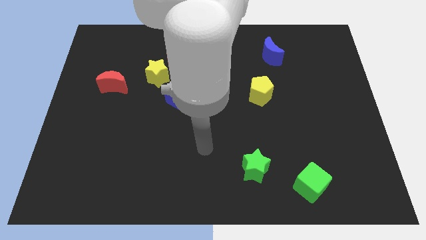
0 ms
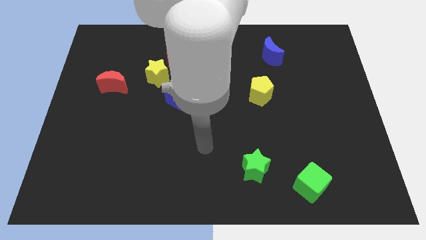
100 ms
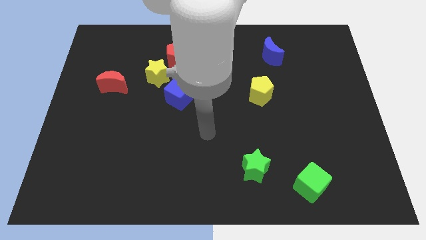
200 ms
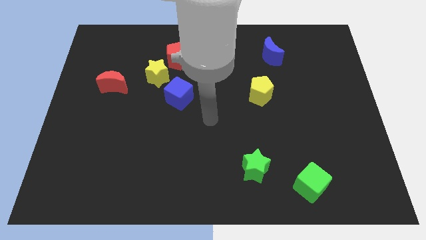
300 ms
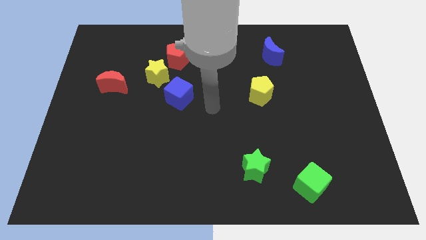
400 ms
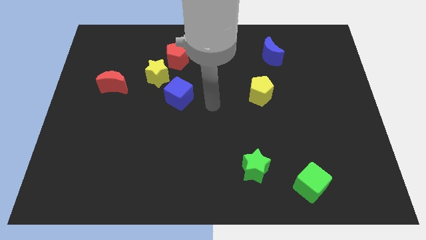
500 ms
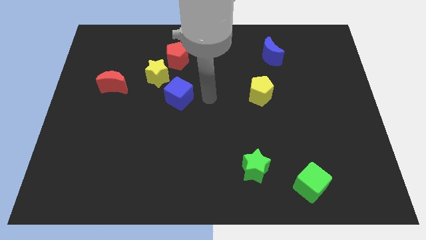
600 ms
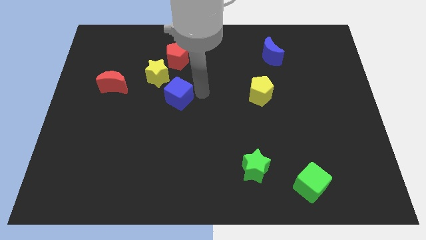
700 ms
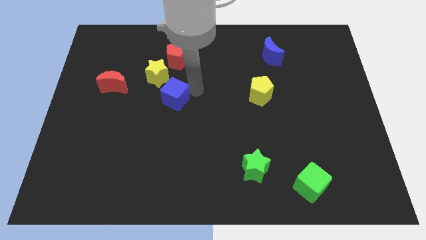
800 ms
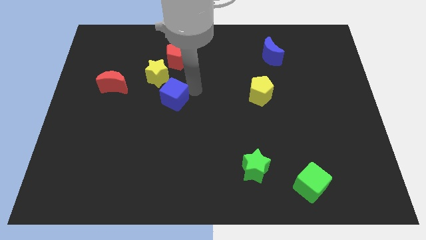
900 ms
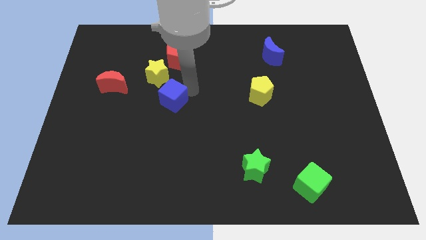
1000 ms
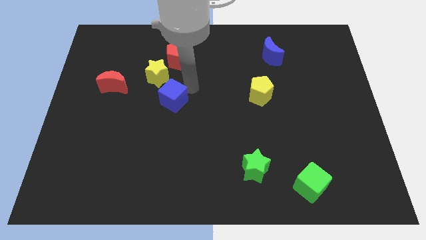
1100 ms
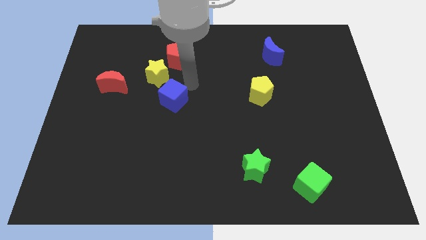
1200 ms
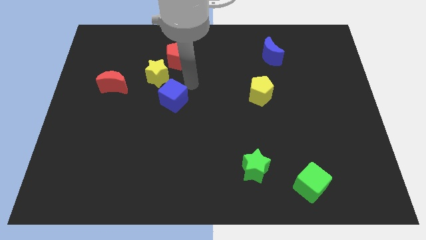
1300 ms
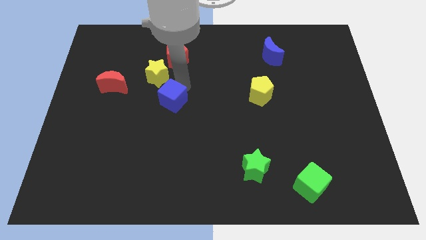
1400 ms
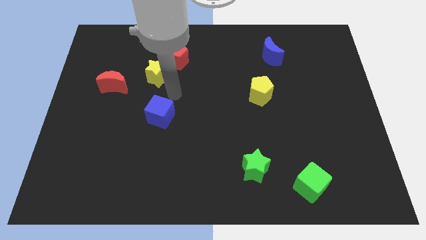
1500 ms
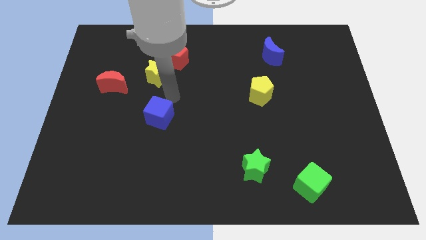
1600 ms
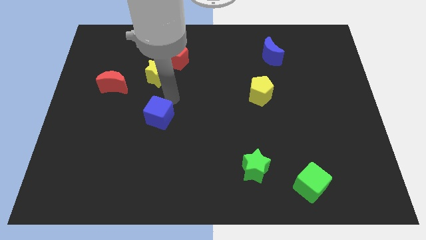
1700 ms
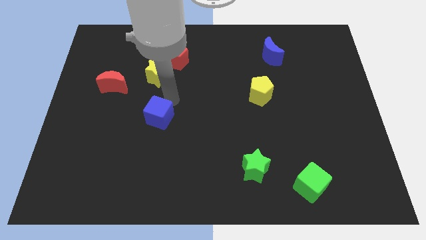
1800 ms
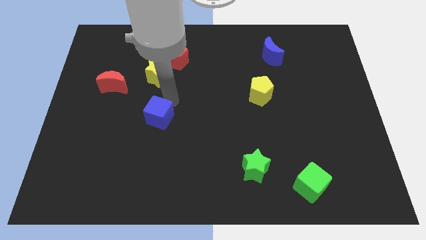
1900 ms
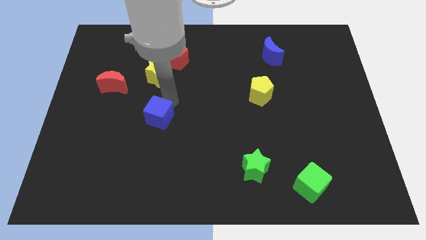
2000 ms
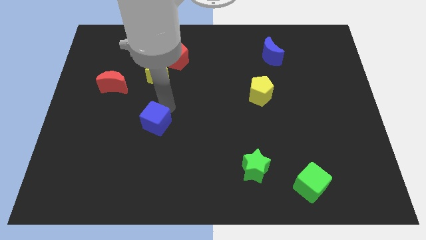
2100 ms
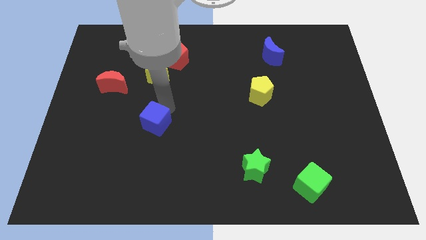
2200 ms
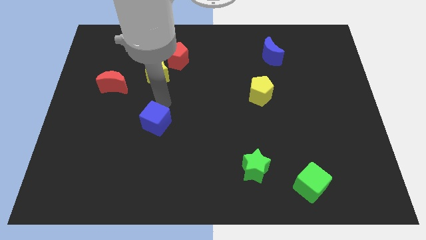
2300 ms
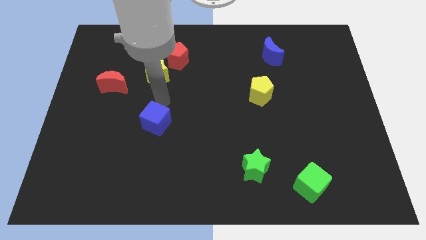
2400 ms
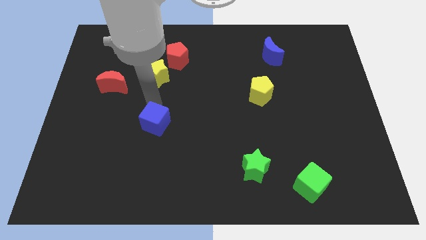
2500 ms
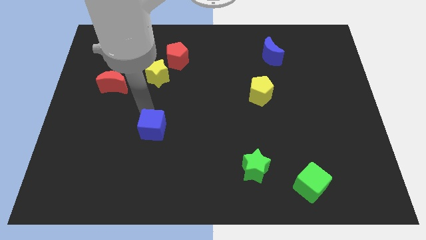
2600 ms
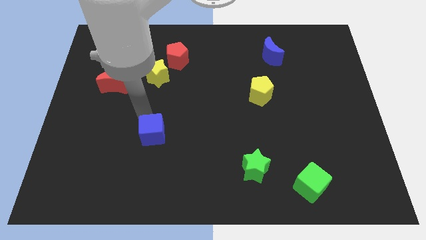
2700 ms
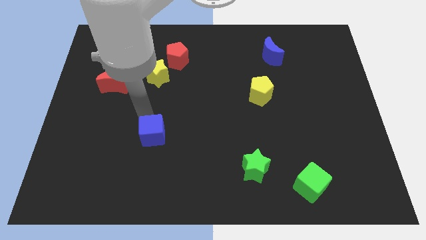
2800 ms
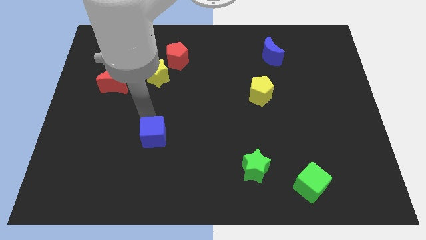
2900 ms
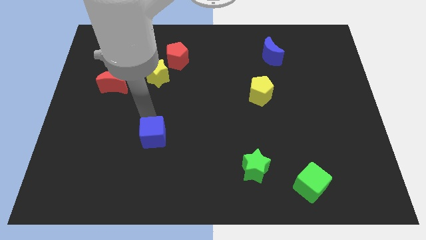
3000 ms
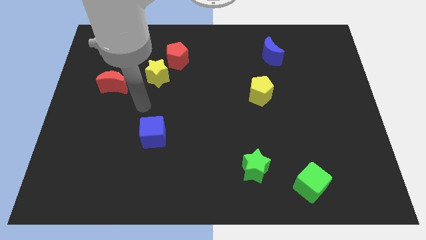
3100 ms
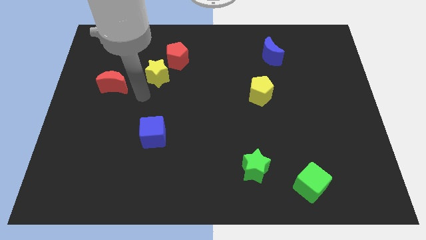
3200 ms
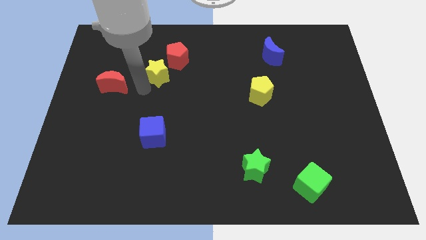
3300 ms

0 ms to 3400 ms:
push the blue cube below the yellow star

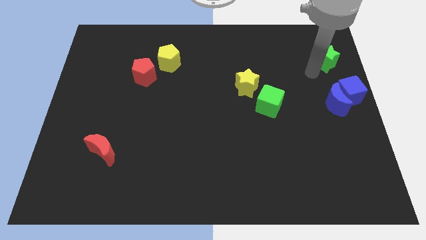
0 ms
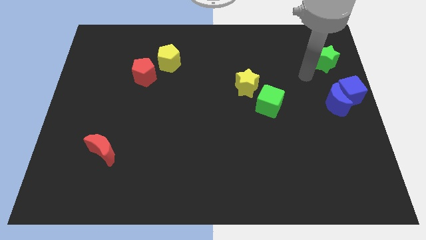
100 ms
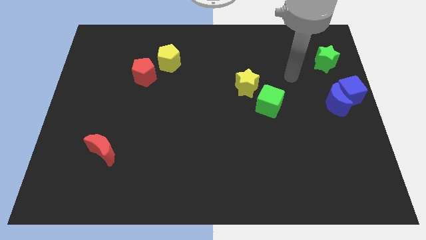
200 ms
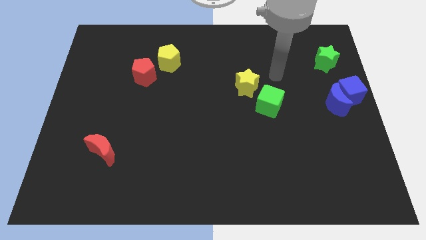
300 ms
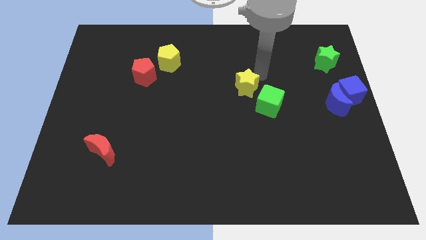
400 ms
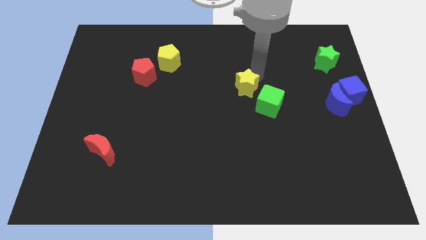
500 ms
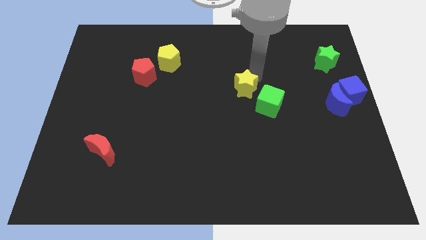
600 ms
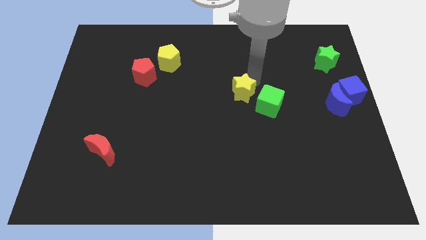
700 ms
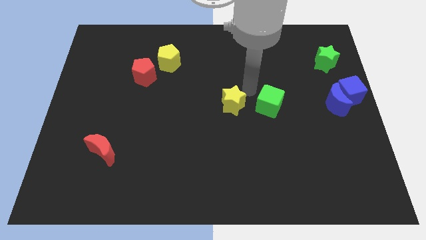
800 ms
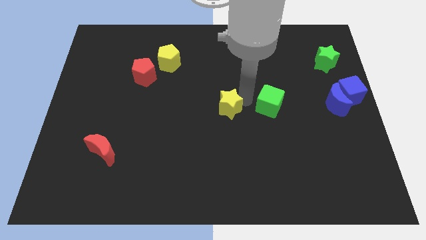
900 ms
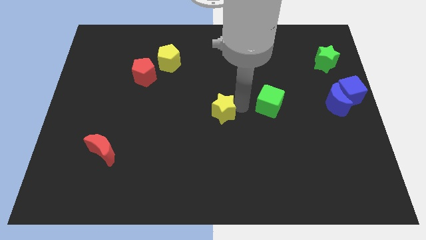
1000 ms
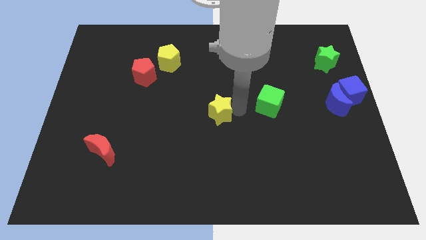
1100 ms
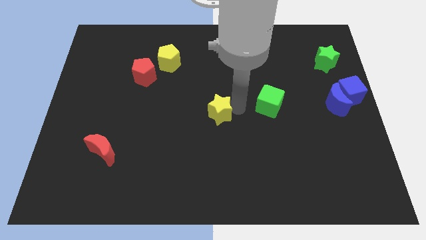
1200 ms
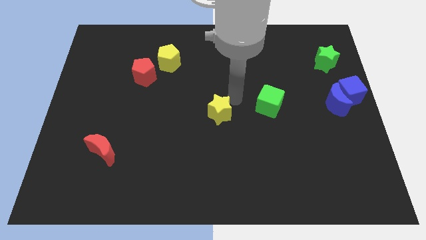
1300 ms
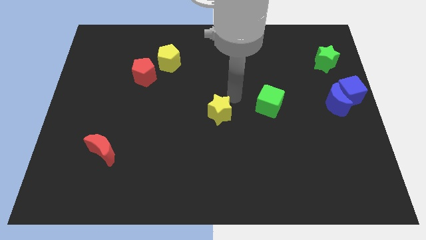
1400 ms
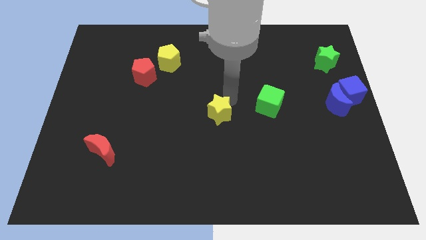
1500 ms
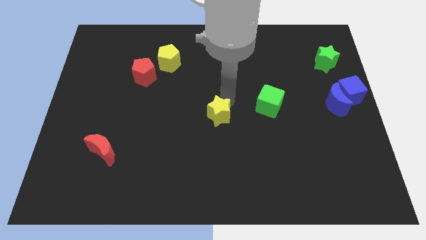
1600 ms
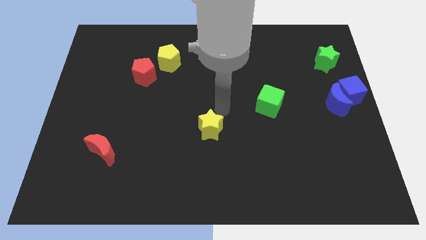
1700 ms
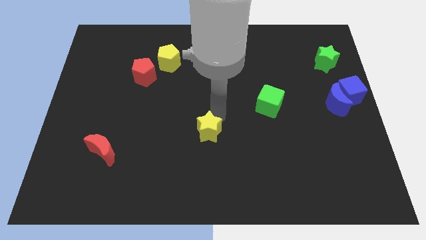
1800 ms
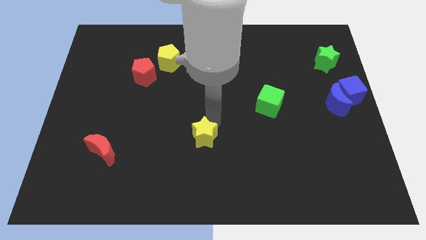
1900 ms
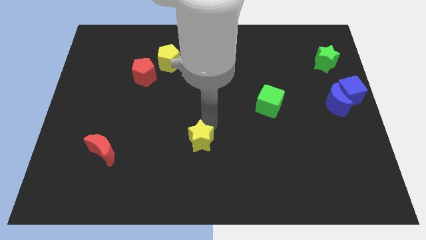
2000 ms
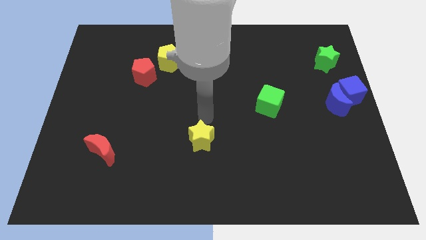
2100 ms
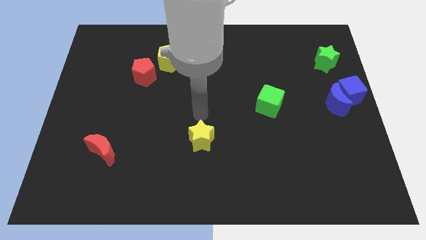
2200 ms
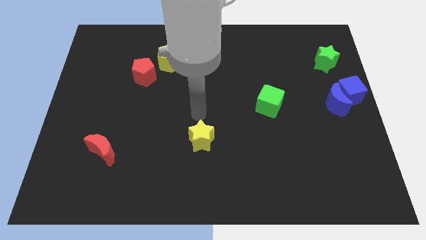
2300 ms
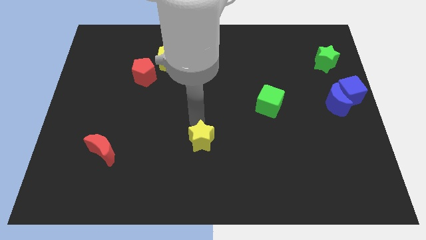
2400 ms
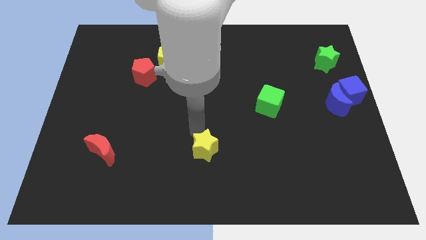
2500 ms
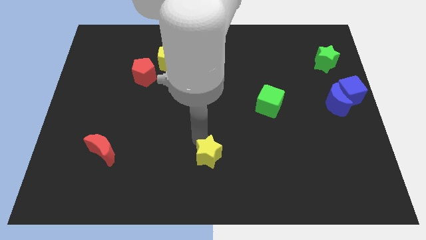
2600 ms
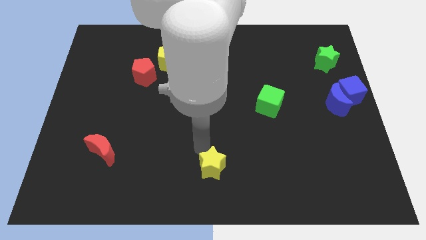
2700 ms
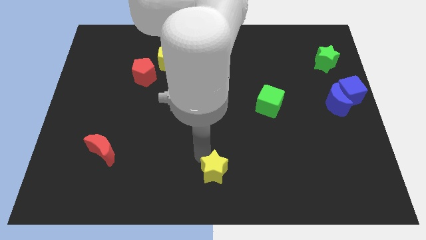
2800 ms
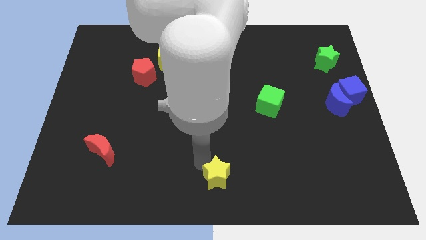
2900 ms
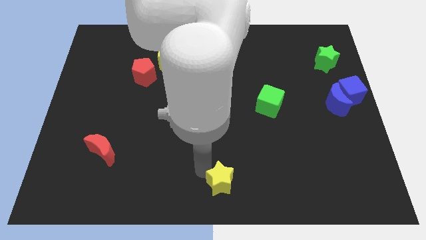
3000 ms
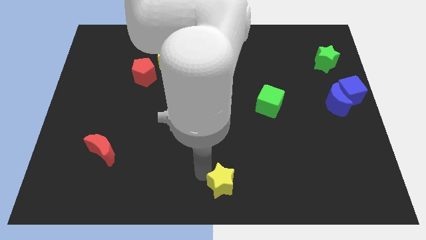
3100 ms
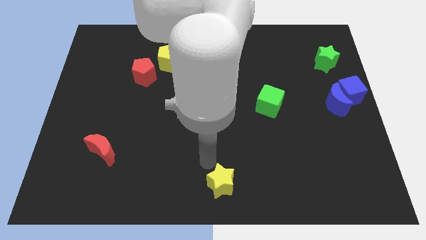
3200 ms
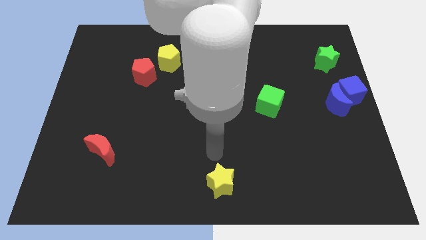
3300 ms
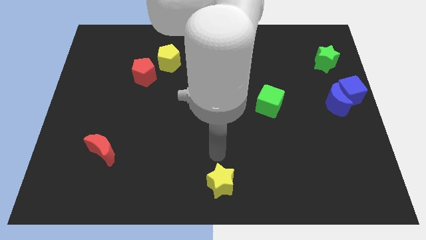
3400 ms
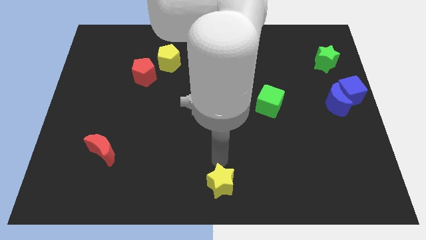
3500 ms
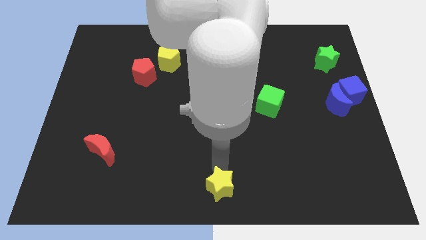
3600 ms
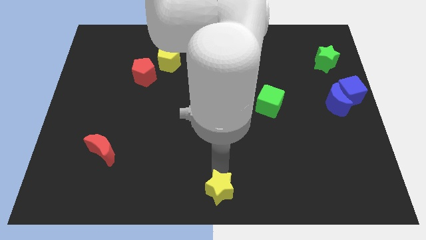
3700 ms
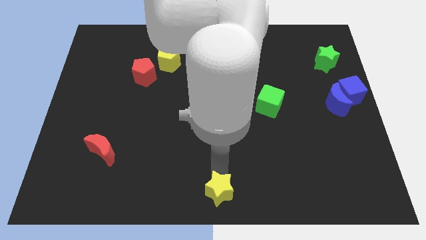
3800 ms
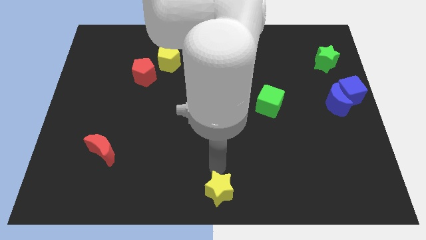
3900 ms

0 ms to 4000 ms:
push the yellow star to the bottom center of the table

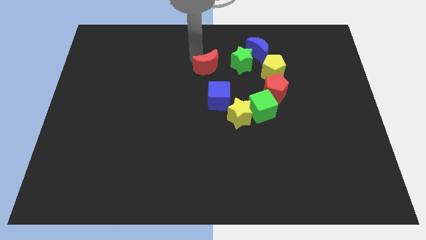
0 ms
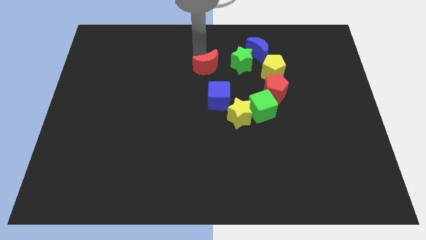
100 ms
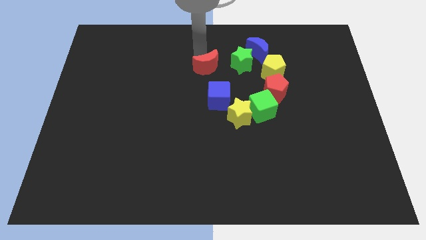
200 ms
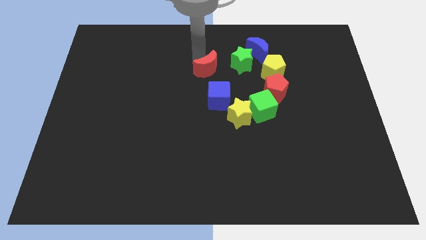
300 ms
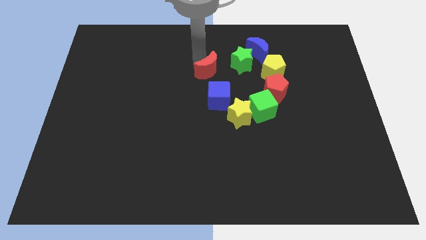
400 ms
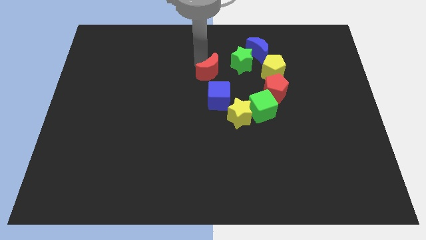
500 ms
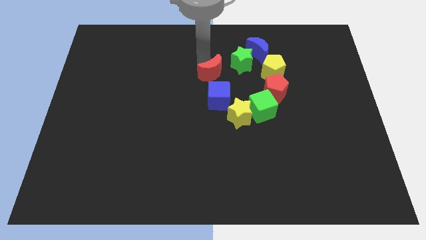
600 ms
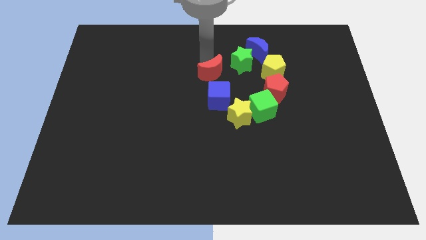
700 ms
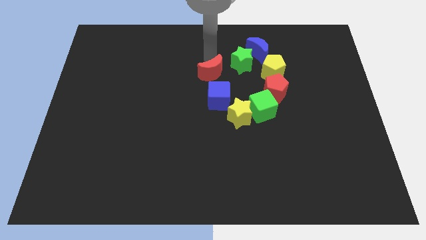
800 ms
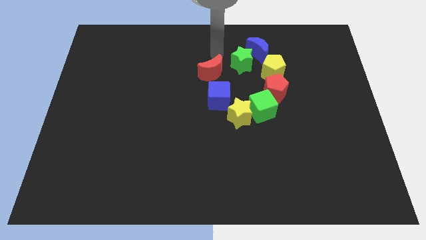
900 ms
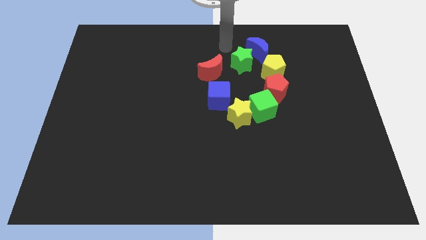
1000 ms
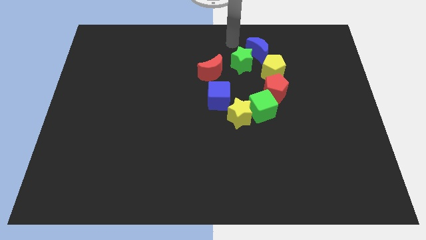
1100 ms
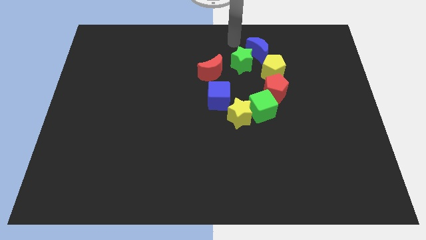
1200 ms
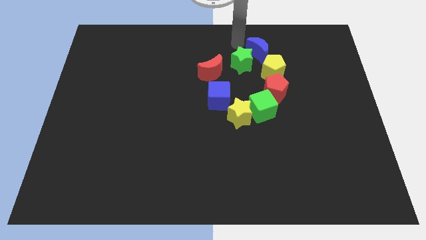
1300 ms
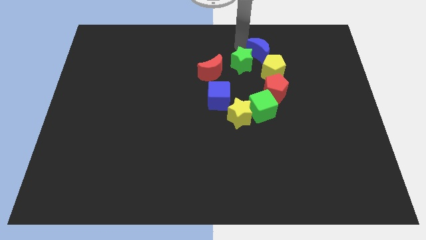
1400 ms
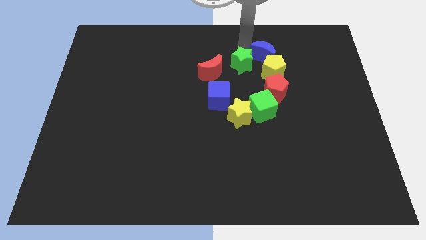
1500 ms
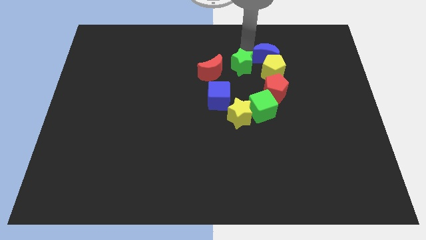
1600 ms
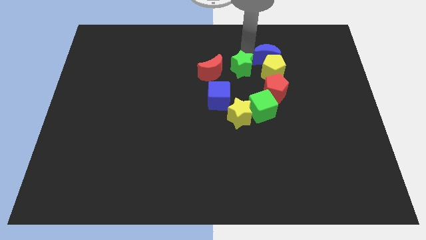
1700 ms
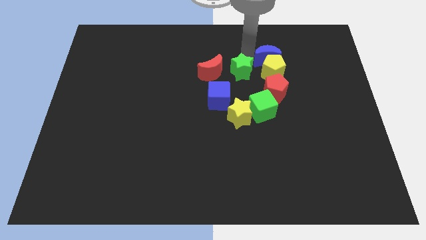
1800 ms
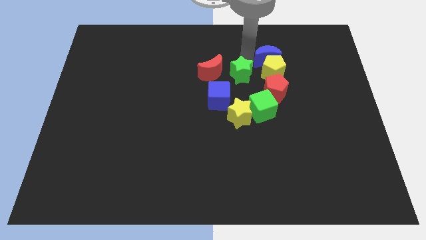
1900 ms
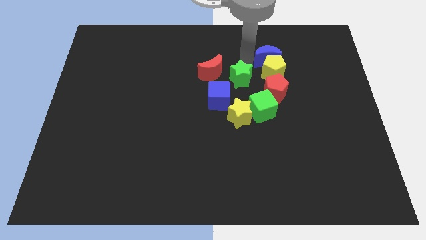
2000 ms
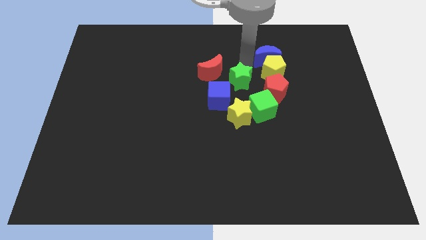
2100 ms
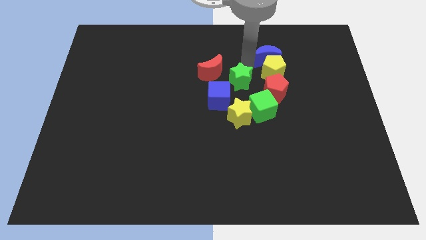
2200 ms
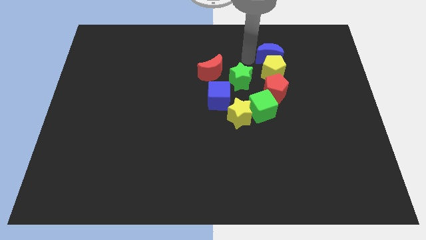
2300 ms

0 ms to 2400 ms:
slightly push the green star down
